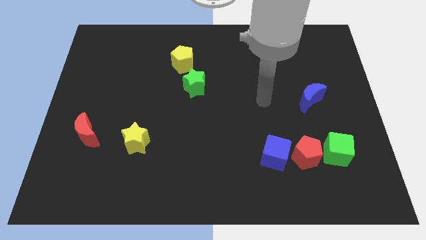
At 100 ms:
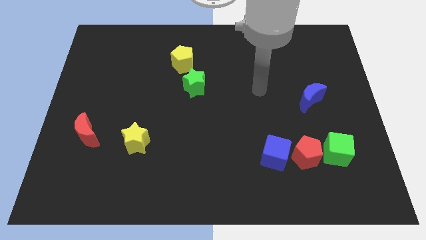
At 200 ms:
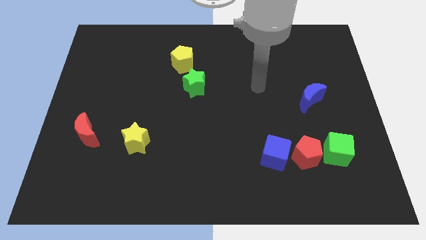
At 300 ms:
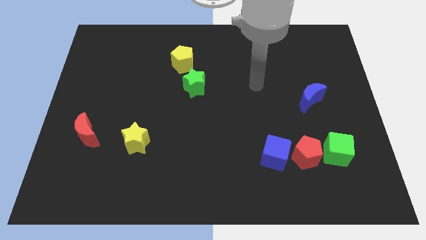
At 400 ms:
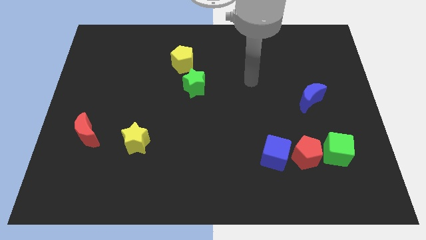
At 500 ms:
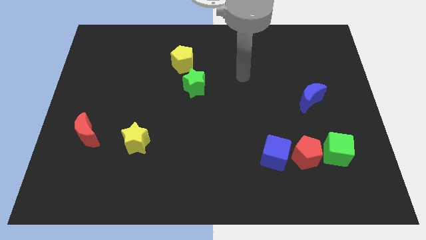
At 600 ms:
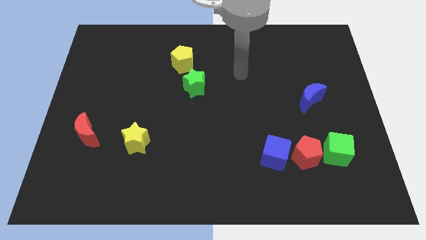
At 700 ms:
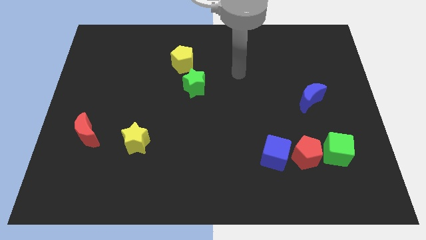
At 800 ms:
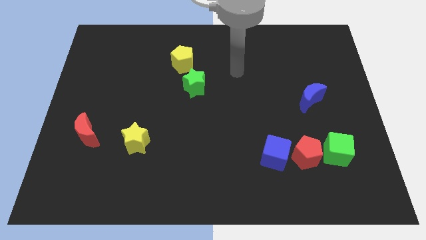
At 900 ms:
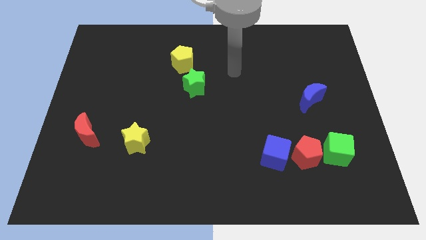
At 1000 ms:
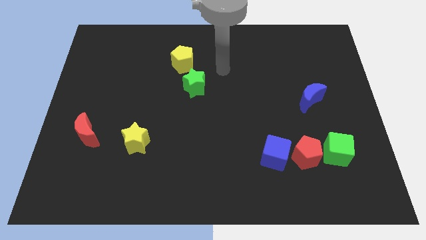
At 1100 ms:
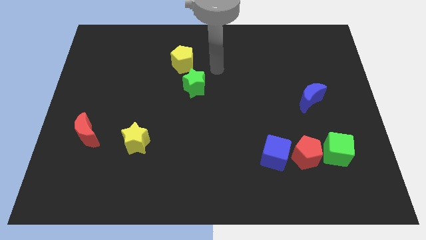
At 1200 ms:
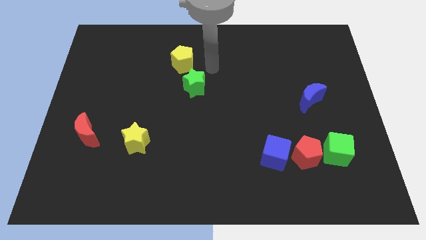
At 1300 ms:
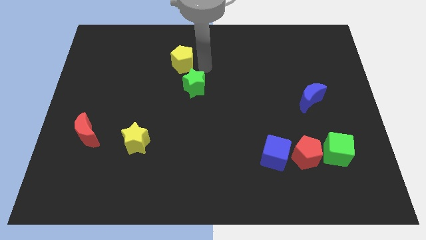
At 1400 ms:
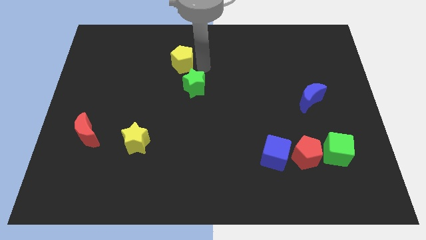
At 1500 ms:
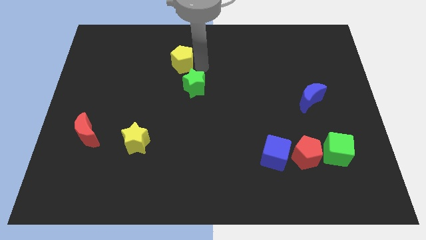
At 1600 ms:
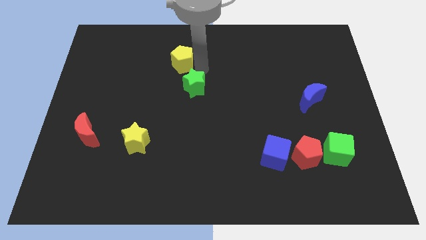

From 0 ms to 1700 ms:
move your arm above the green star

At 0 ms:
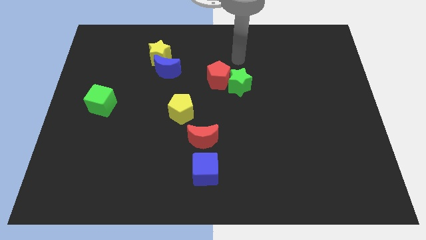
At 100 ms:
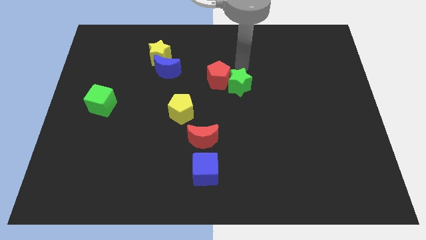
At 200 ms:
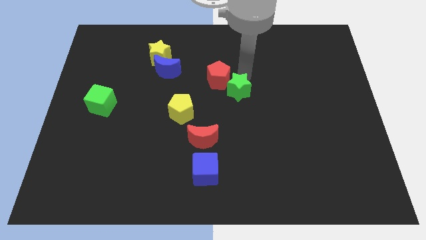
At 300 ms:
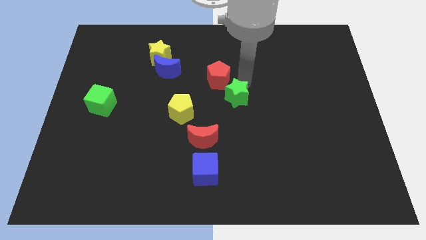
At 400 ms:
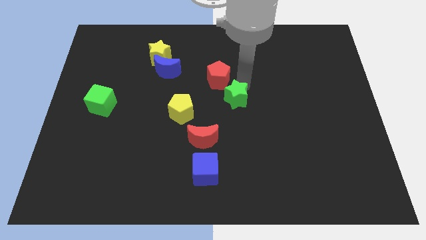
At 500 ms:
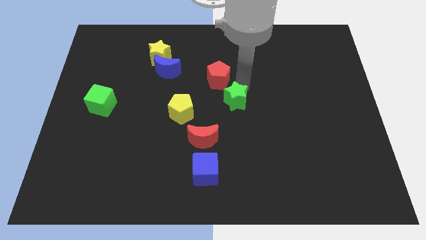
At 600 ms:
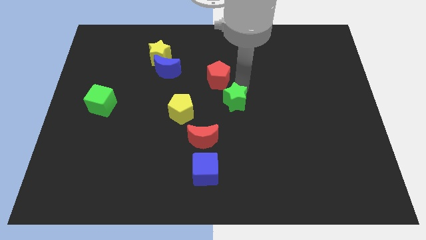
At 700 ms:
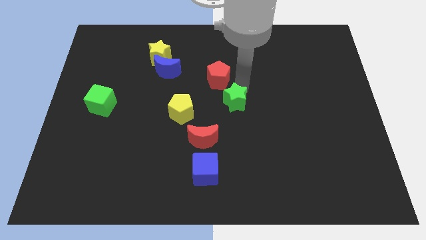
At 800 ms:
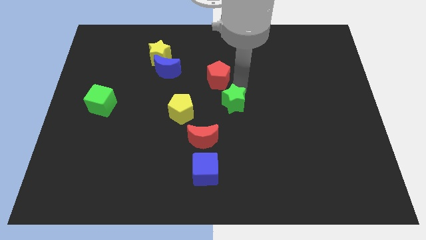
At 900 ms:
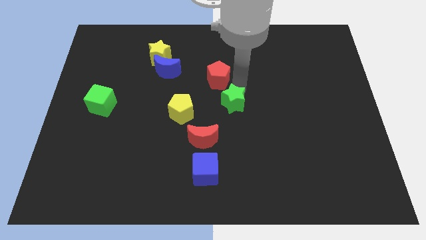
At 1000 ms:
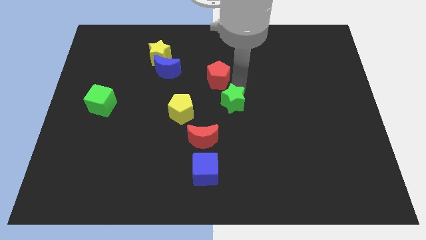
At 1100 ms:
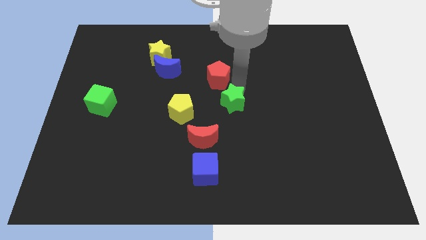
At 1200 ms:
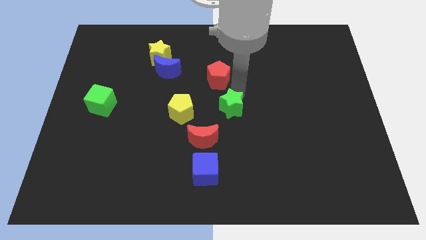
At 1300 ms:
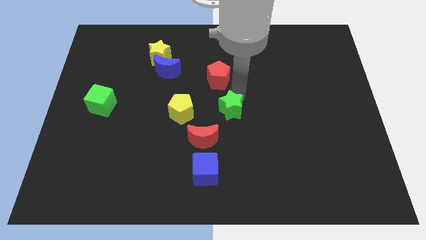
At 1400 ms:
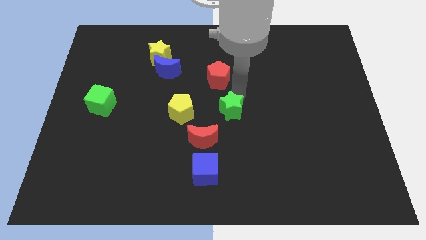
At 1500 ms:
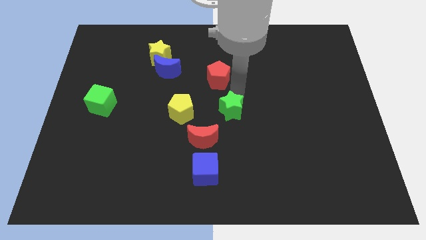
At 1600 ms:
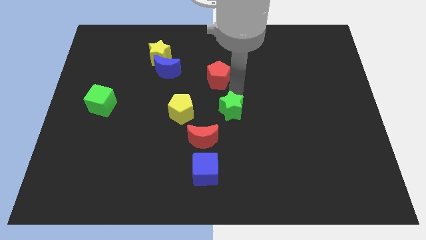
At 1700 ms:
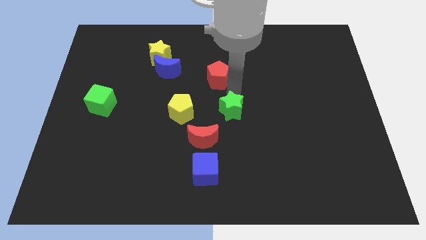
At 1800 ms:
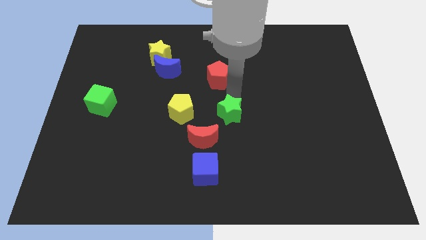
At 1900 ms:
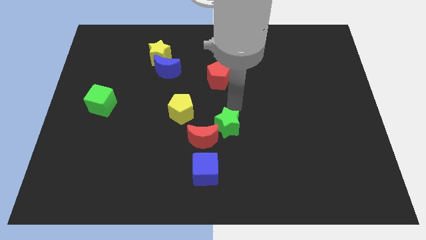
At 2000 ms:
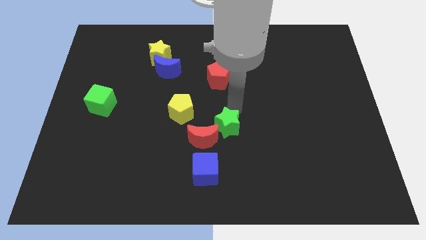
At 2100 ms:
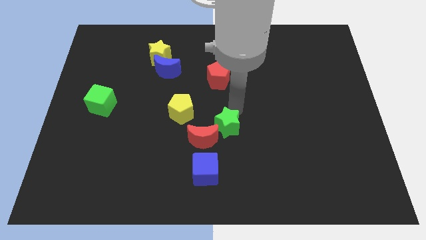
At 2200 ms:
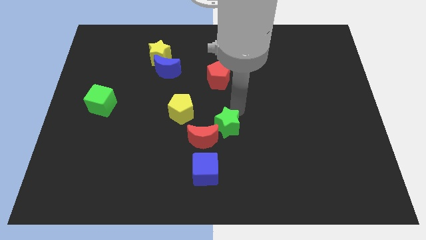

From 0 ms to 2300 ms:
separate the green star from the red pentagon

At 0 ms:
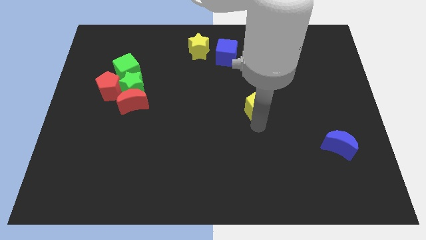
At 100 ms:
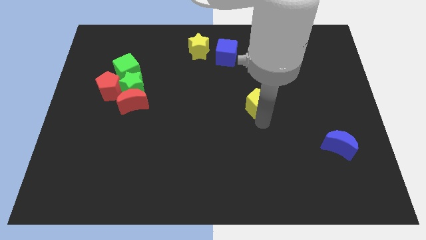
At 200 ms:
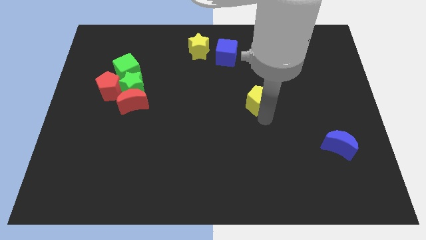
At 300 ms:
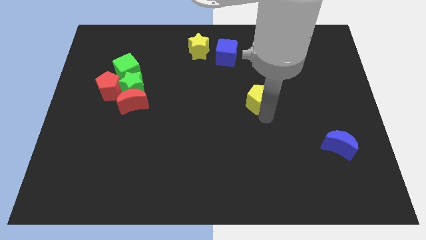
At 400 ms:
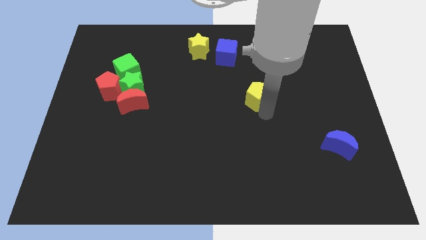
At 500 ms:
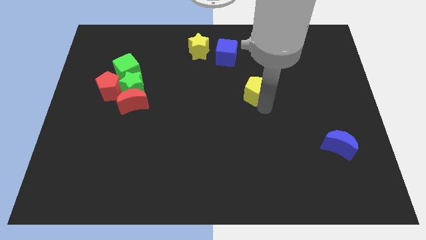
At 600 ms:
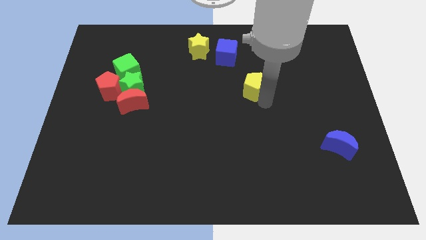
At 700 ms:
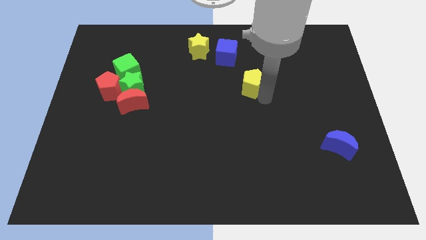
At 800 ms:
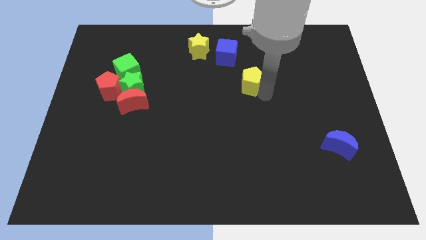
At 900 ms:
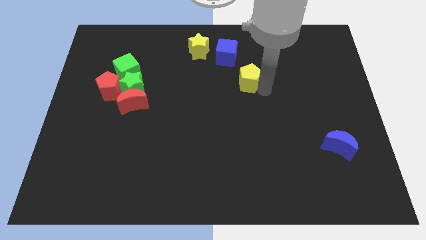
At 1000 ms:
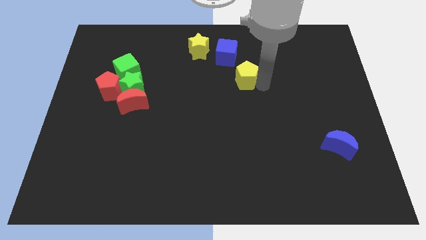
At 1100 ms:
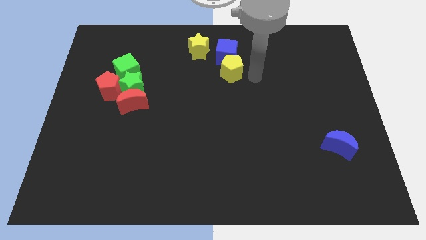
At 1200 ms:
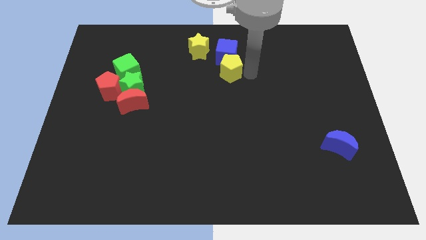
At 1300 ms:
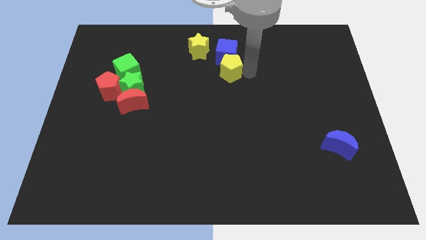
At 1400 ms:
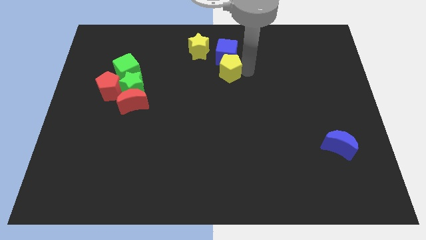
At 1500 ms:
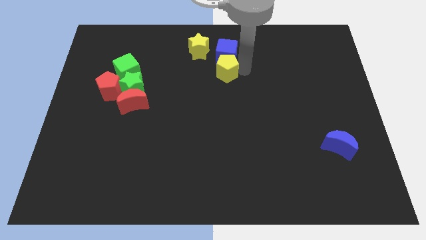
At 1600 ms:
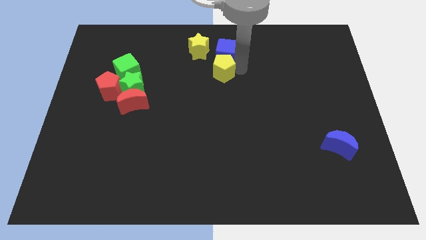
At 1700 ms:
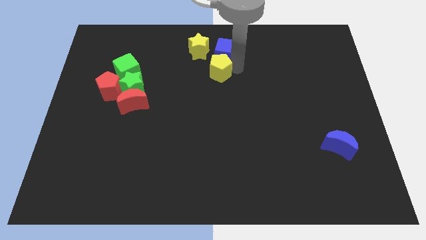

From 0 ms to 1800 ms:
put the yellow pentagon underneath the blue cube

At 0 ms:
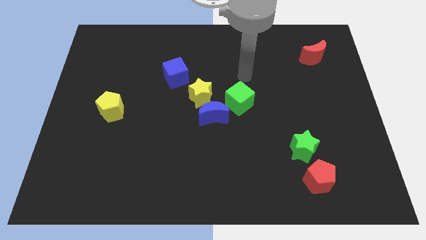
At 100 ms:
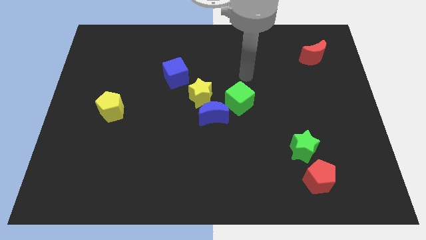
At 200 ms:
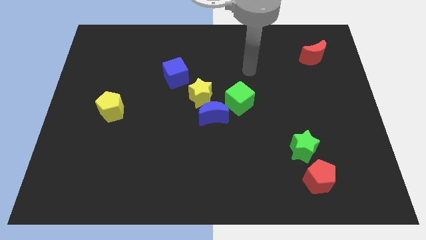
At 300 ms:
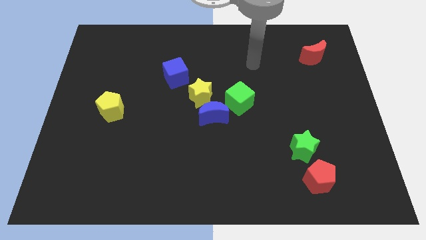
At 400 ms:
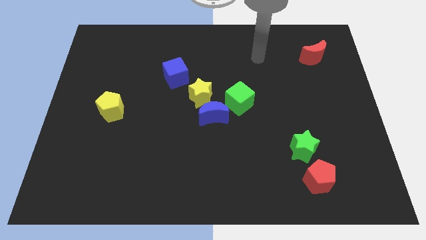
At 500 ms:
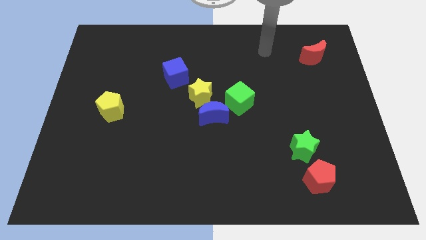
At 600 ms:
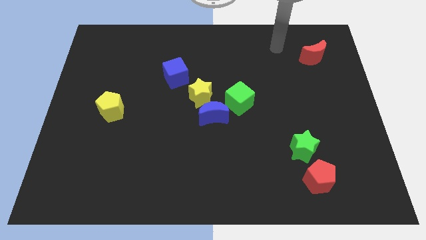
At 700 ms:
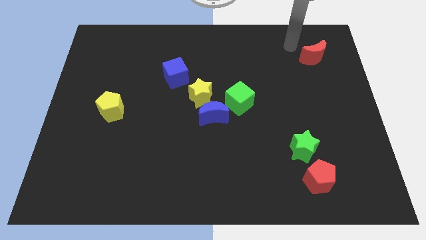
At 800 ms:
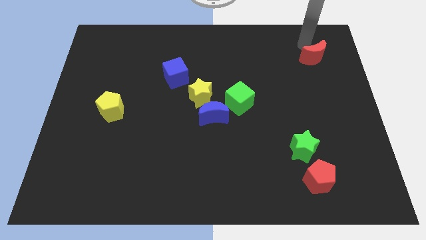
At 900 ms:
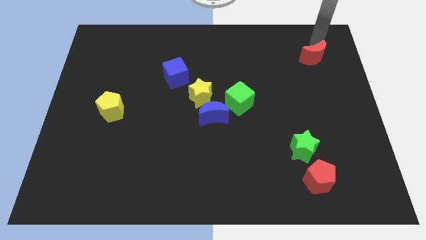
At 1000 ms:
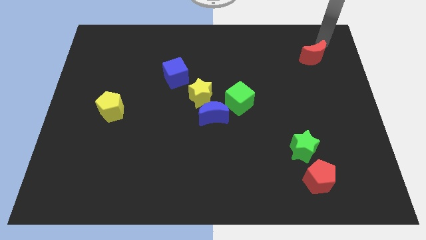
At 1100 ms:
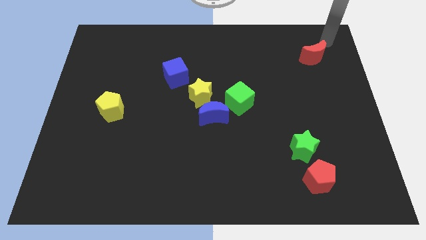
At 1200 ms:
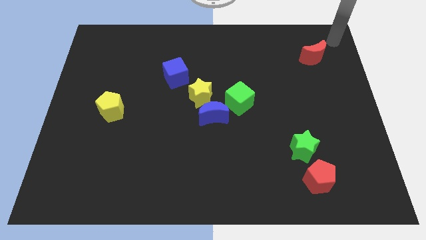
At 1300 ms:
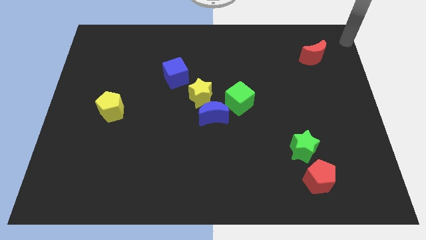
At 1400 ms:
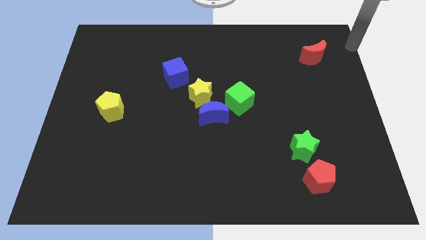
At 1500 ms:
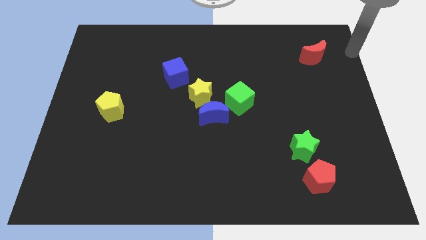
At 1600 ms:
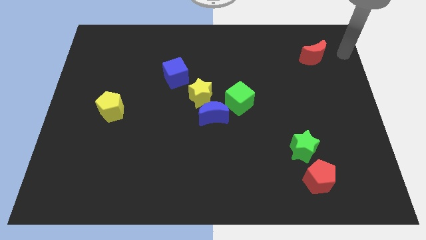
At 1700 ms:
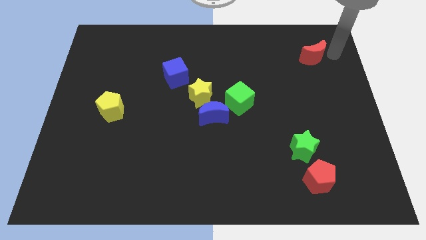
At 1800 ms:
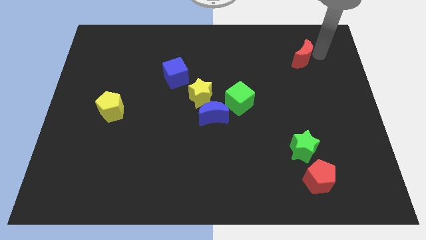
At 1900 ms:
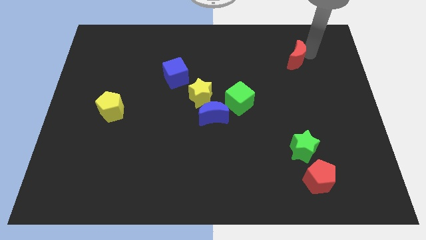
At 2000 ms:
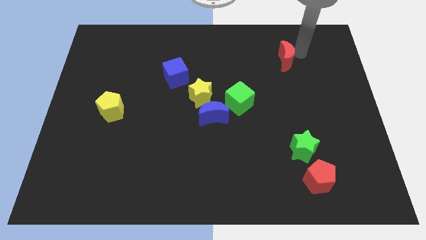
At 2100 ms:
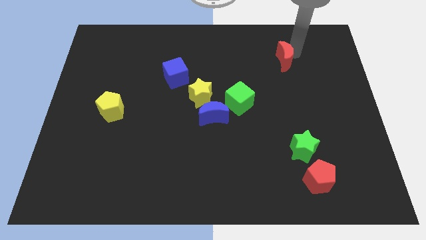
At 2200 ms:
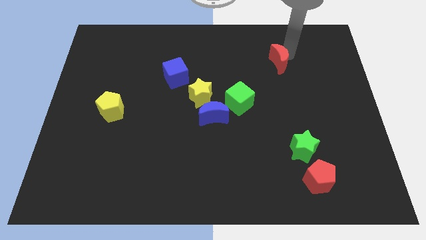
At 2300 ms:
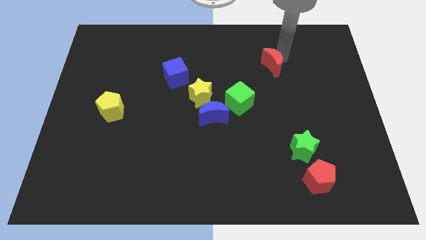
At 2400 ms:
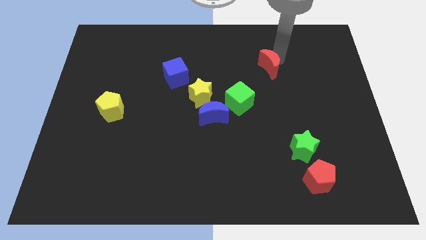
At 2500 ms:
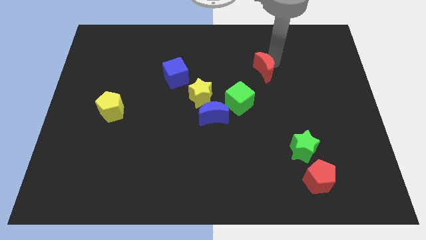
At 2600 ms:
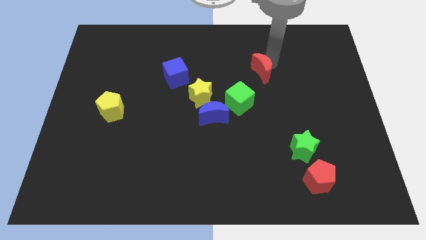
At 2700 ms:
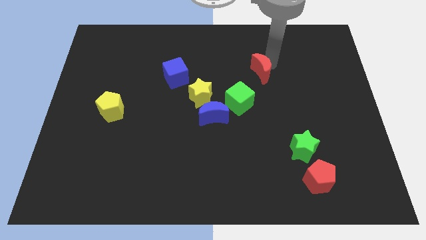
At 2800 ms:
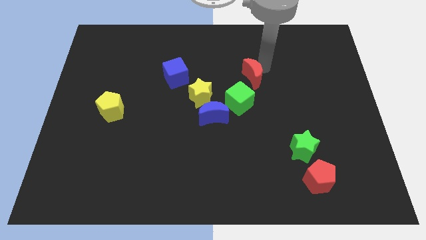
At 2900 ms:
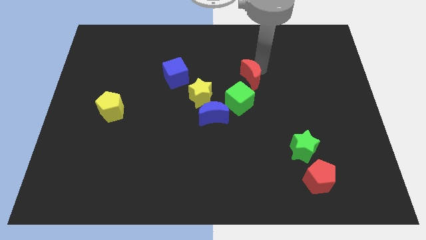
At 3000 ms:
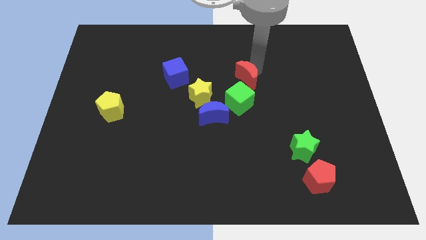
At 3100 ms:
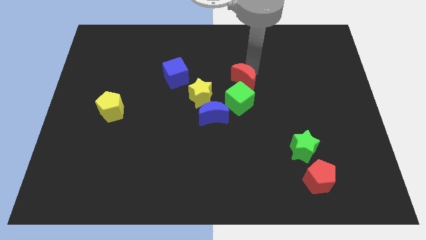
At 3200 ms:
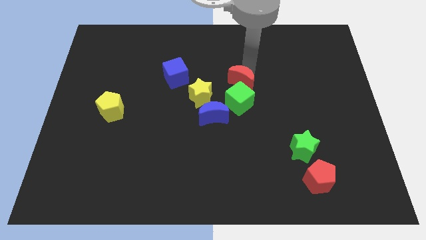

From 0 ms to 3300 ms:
move the red moon close to the green cube
